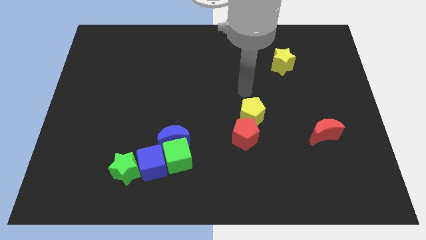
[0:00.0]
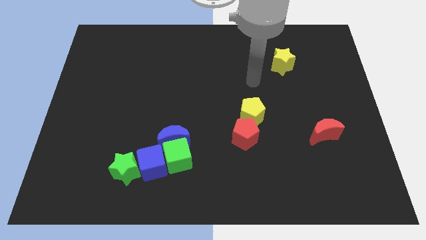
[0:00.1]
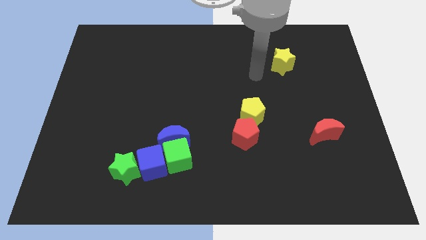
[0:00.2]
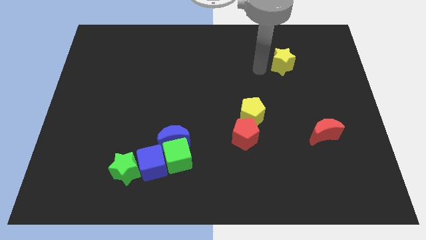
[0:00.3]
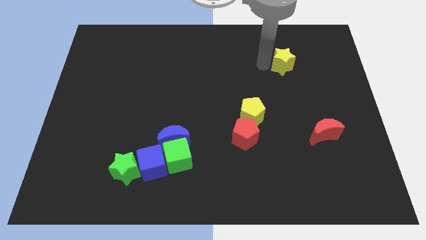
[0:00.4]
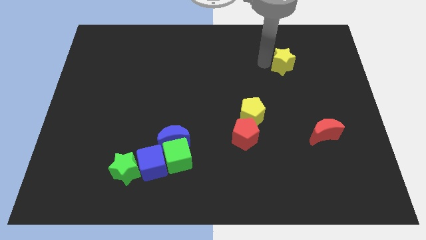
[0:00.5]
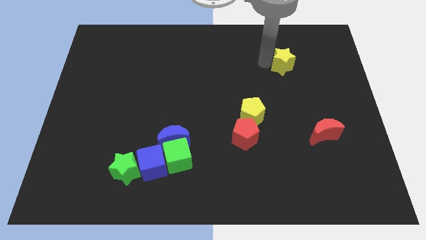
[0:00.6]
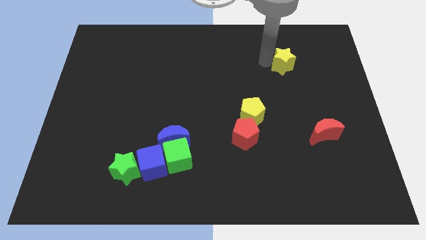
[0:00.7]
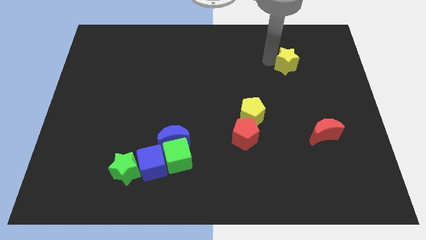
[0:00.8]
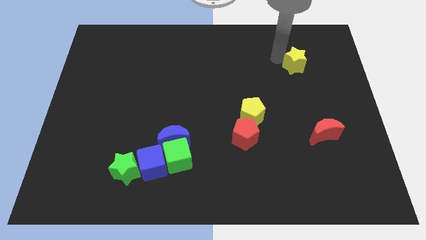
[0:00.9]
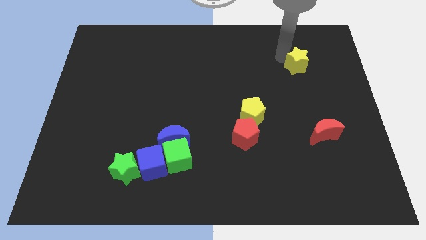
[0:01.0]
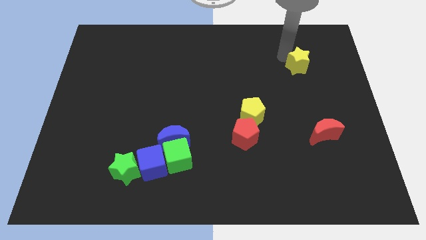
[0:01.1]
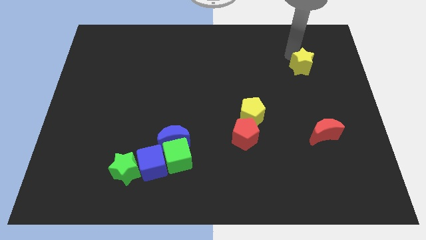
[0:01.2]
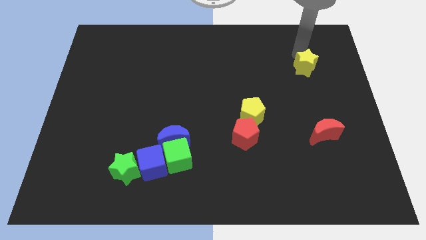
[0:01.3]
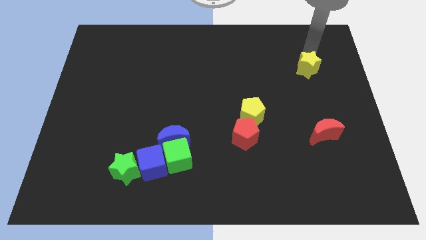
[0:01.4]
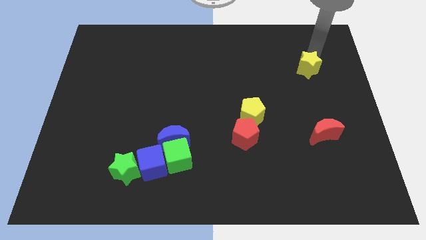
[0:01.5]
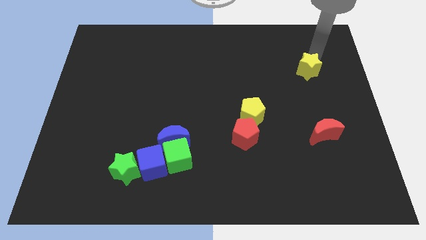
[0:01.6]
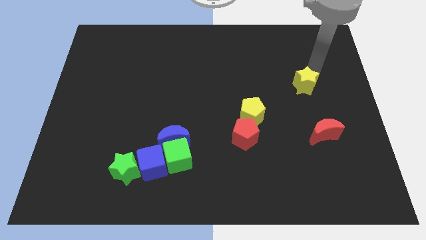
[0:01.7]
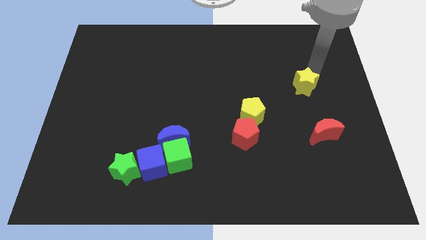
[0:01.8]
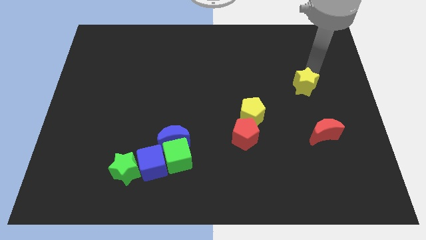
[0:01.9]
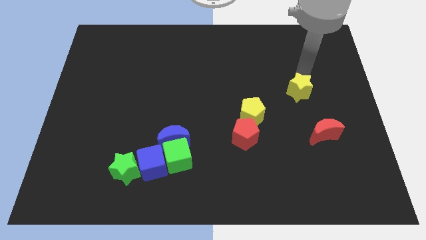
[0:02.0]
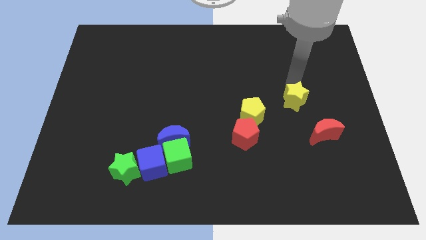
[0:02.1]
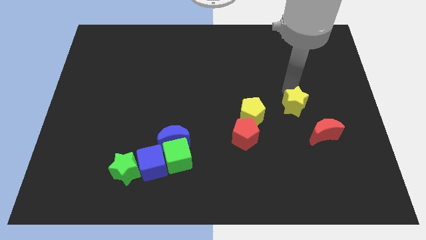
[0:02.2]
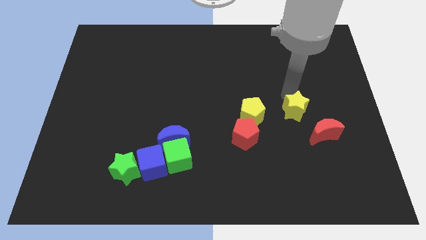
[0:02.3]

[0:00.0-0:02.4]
push yellow star downwards

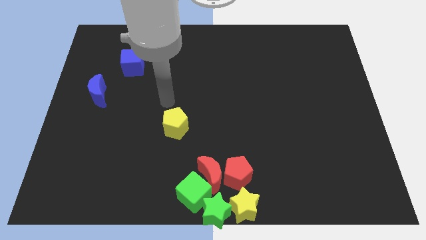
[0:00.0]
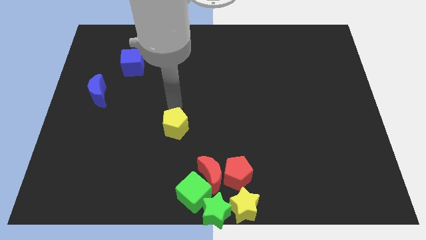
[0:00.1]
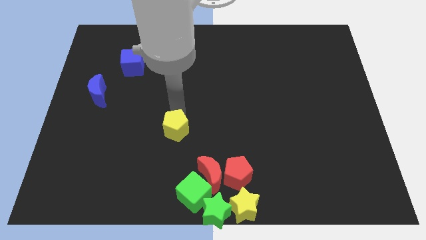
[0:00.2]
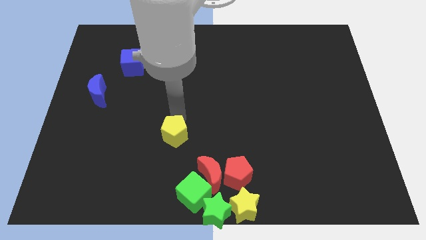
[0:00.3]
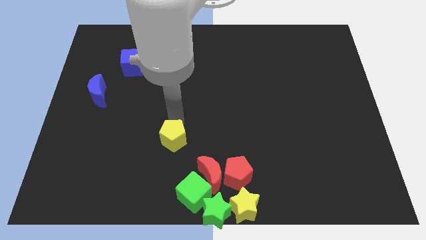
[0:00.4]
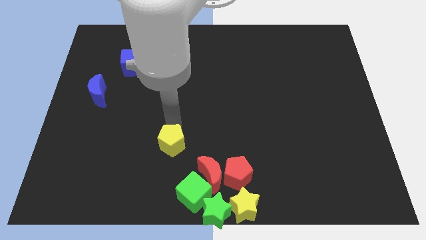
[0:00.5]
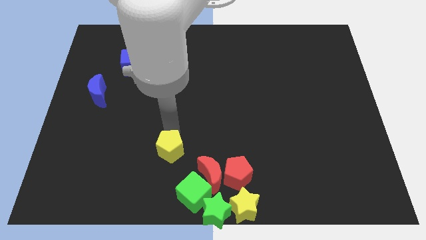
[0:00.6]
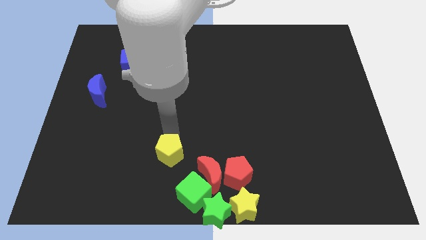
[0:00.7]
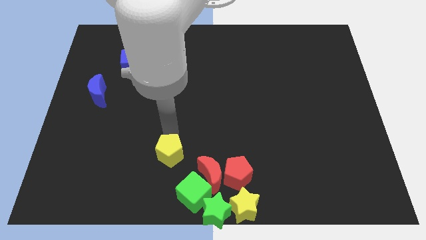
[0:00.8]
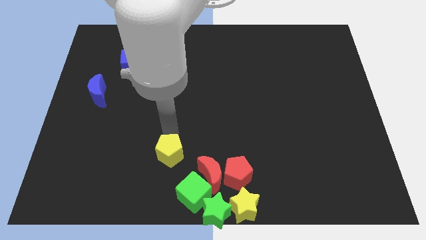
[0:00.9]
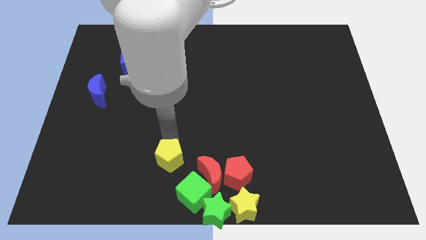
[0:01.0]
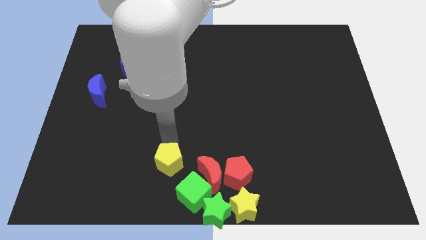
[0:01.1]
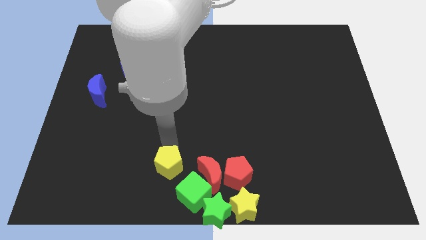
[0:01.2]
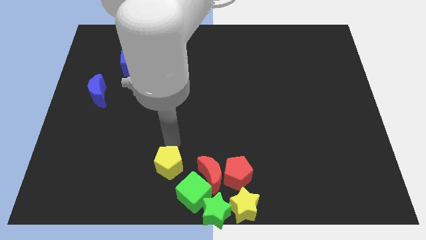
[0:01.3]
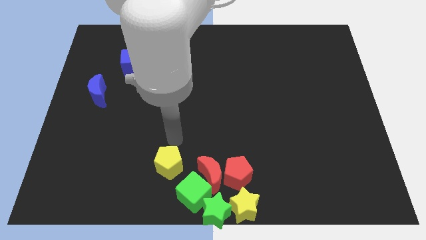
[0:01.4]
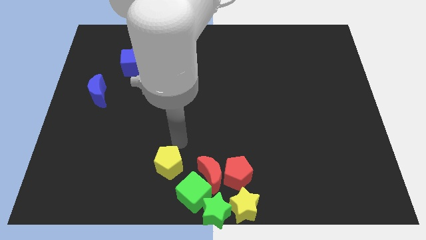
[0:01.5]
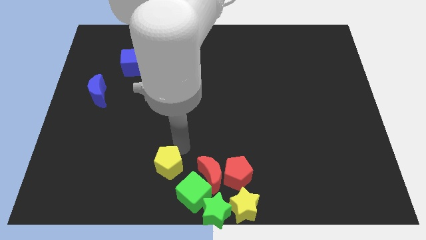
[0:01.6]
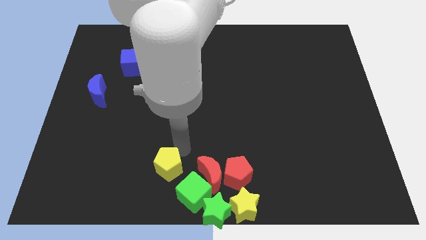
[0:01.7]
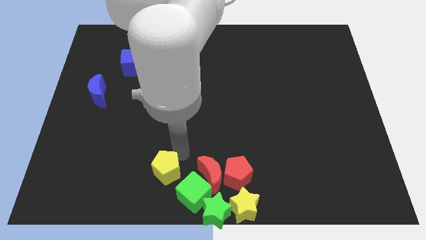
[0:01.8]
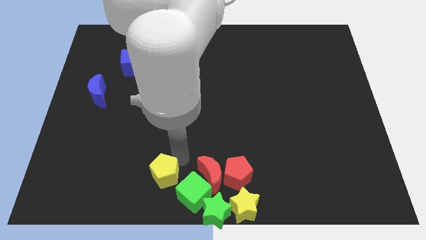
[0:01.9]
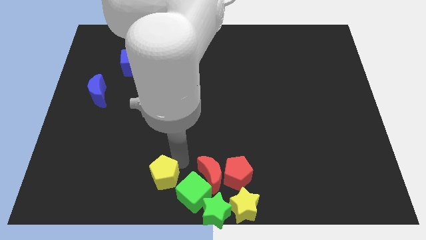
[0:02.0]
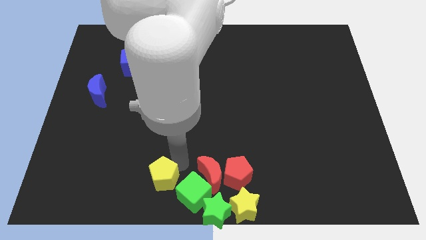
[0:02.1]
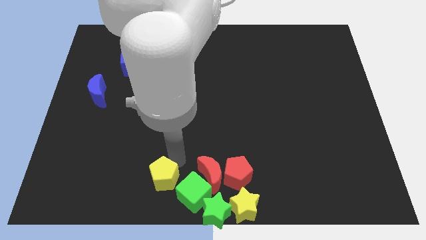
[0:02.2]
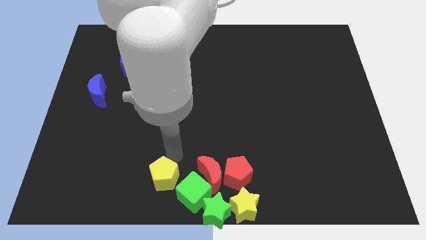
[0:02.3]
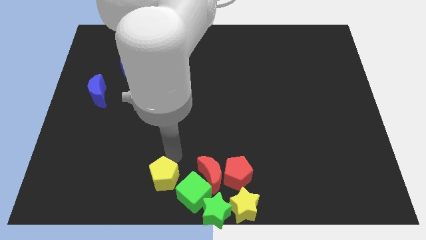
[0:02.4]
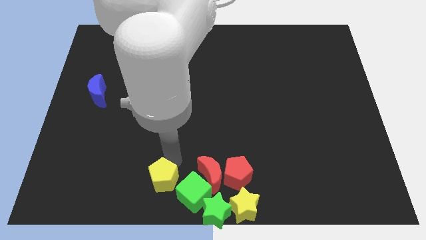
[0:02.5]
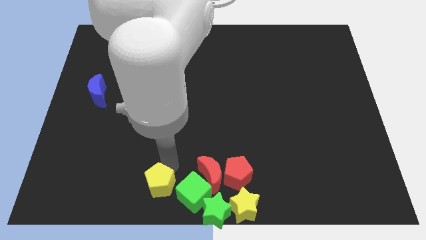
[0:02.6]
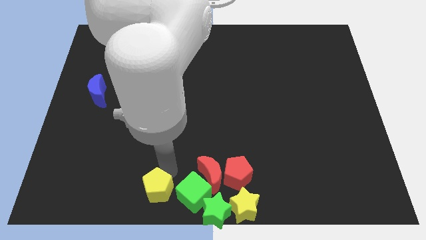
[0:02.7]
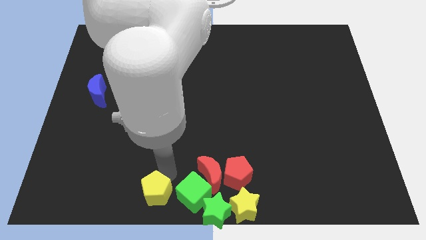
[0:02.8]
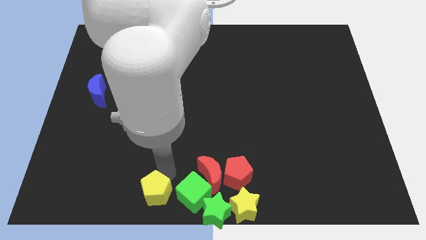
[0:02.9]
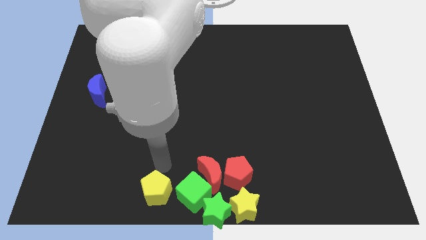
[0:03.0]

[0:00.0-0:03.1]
push the yellow pentagon to the left of the green cube

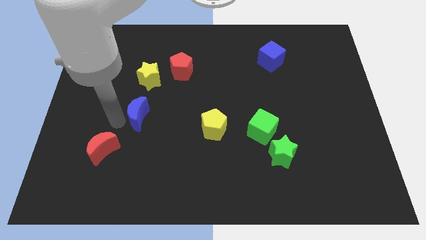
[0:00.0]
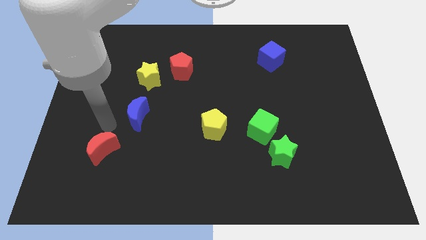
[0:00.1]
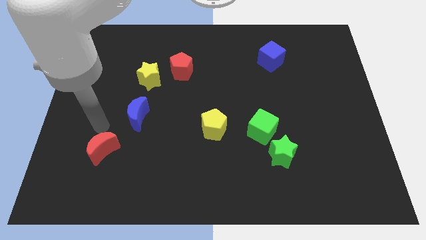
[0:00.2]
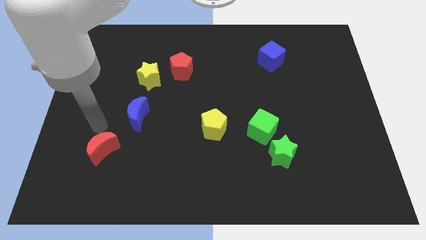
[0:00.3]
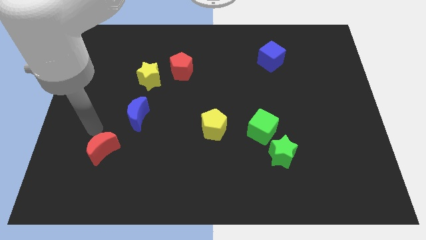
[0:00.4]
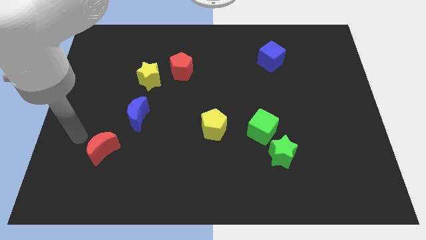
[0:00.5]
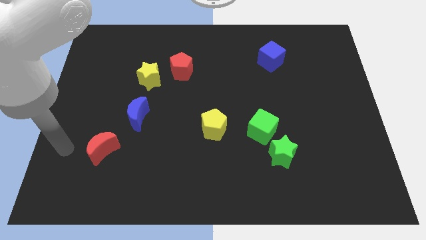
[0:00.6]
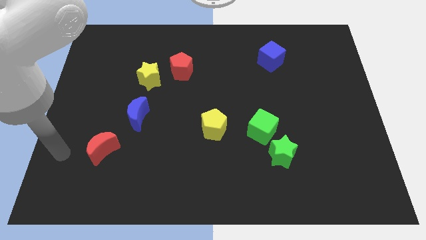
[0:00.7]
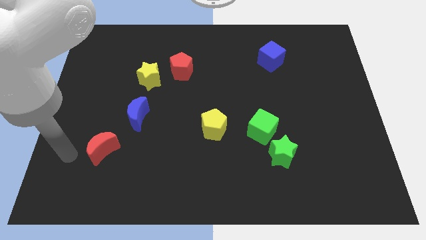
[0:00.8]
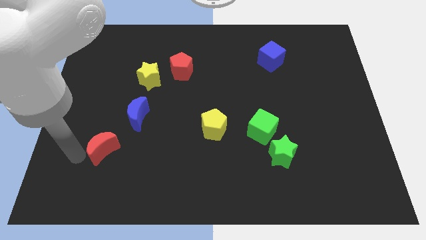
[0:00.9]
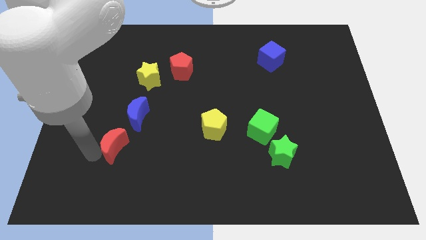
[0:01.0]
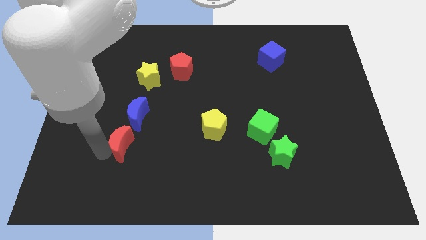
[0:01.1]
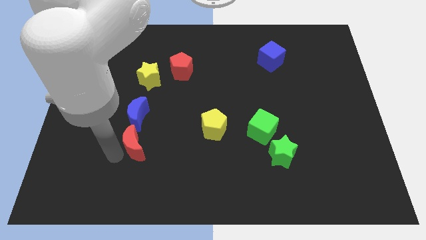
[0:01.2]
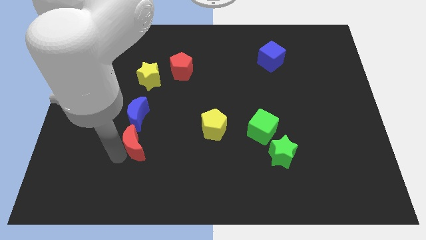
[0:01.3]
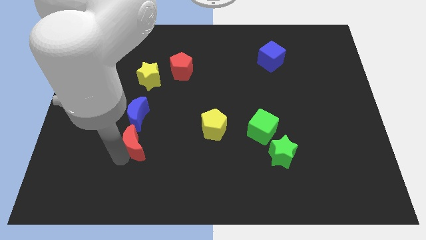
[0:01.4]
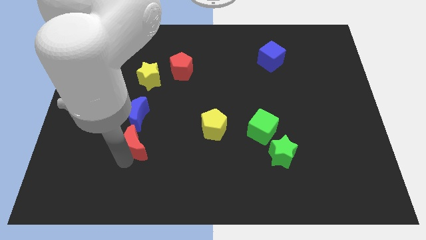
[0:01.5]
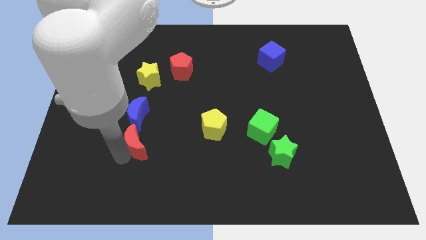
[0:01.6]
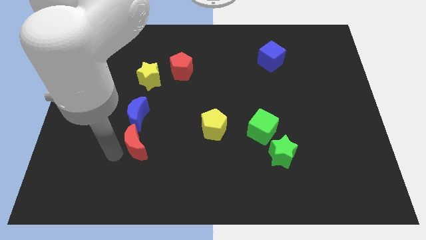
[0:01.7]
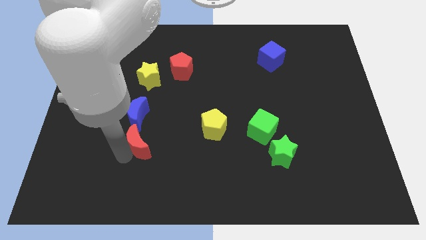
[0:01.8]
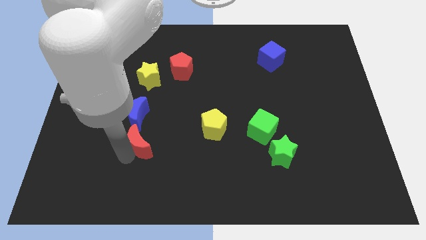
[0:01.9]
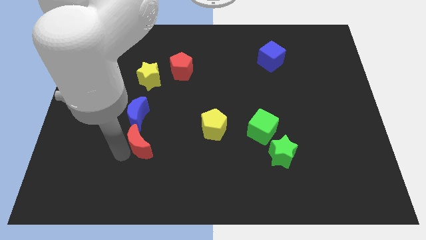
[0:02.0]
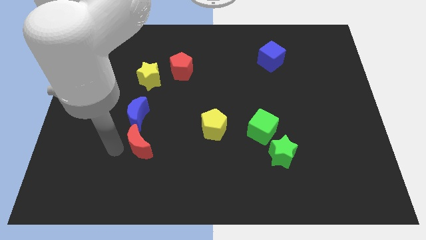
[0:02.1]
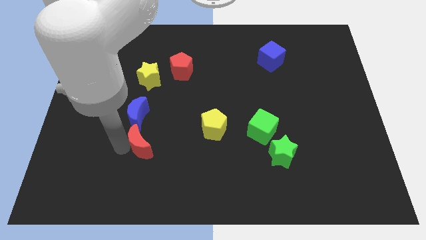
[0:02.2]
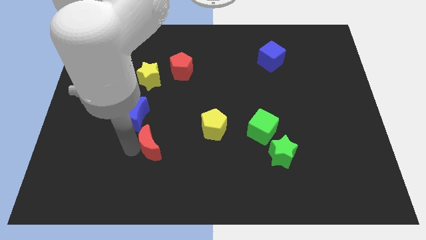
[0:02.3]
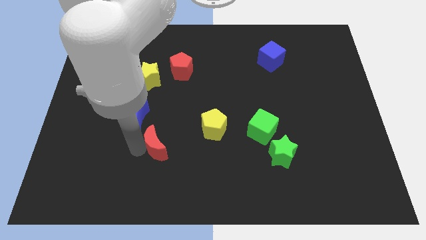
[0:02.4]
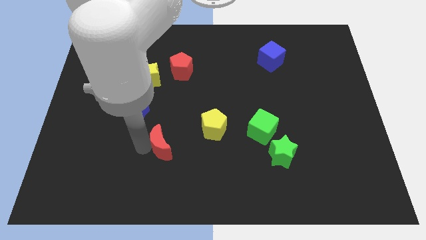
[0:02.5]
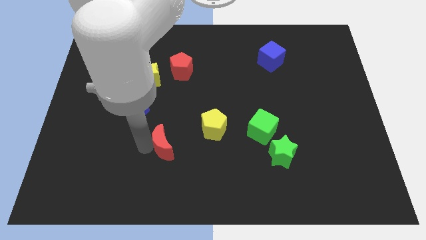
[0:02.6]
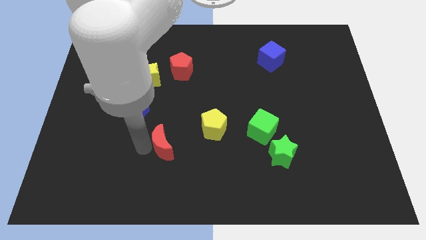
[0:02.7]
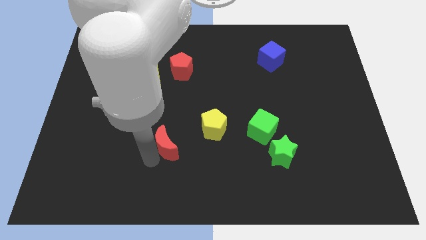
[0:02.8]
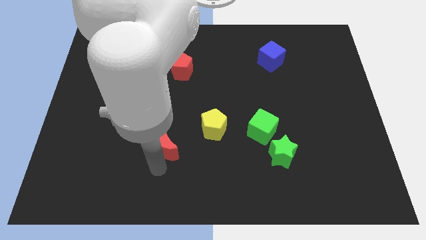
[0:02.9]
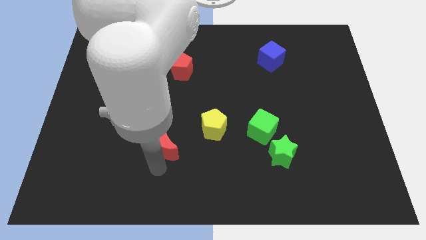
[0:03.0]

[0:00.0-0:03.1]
put the red moon diagonally to yellow pentagon

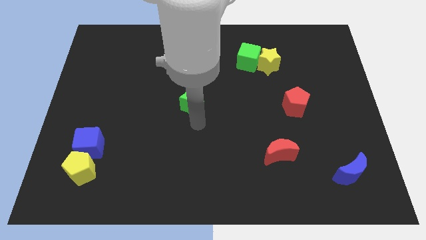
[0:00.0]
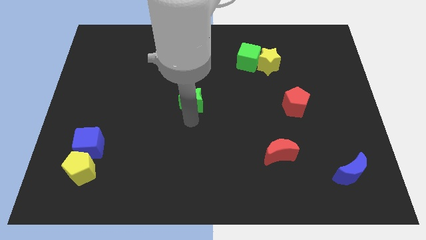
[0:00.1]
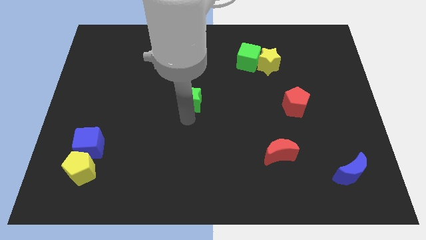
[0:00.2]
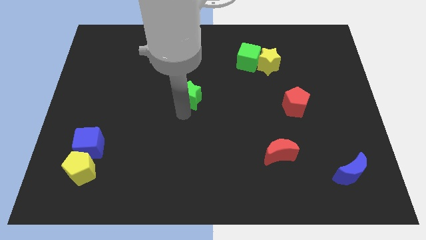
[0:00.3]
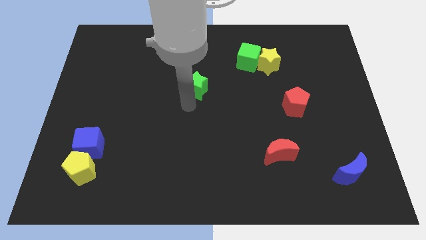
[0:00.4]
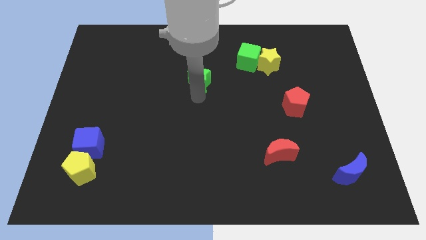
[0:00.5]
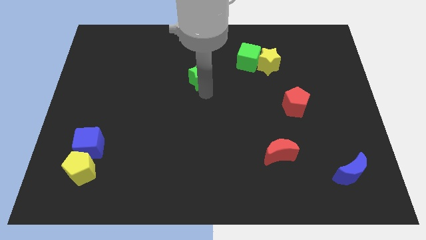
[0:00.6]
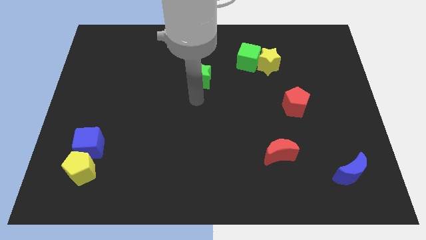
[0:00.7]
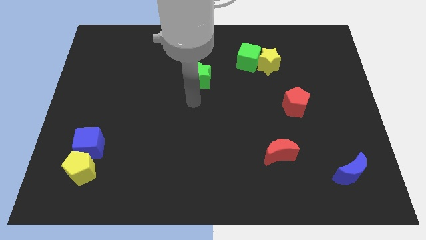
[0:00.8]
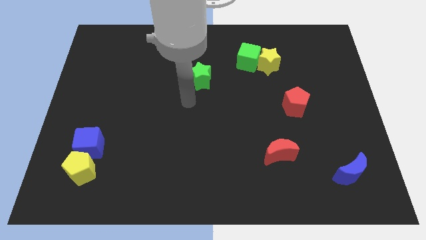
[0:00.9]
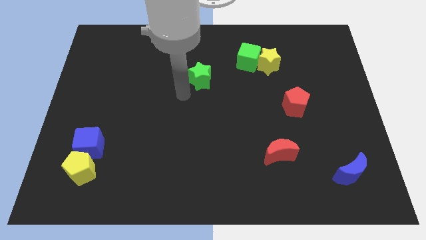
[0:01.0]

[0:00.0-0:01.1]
move the green star slightly towards the top
